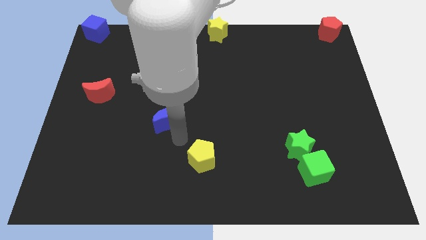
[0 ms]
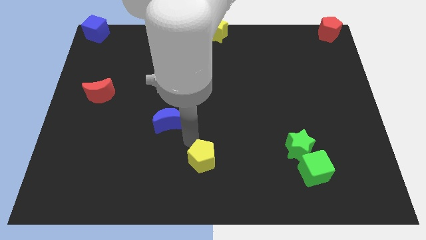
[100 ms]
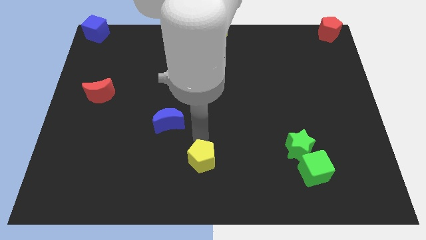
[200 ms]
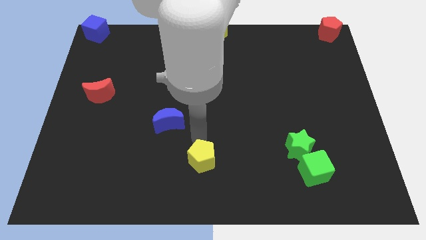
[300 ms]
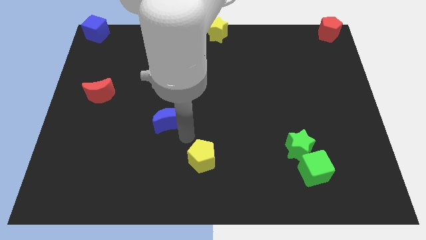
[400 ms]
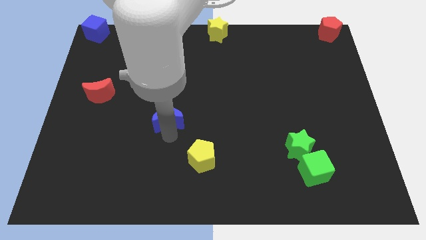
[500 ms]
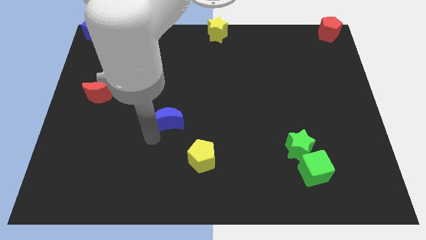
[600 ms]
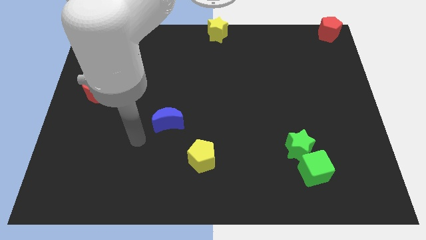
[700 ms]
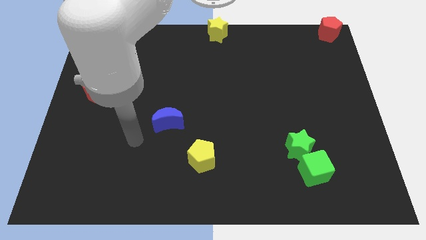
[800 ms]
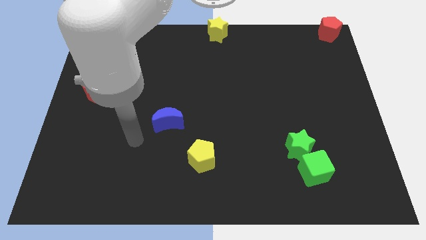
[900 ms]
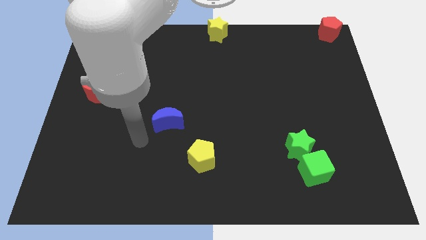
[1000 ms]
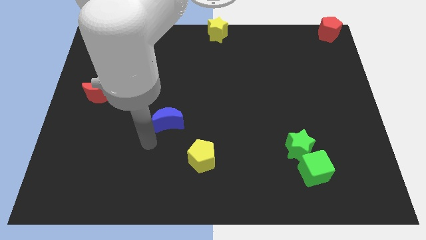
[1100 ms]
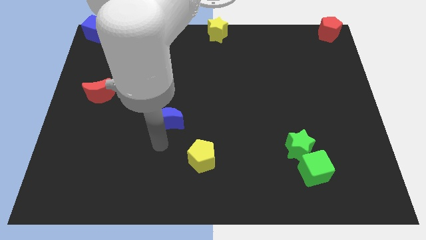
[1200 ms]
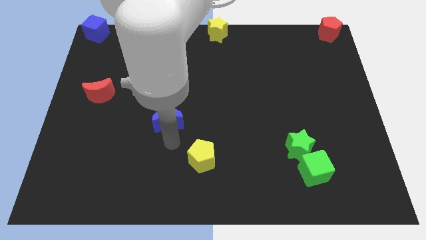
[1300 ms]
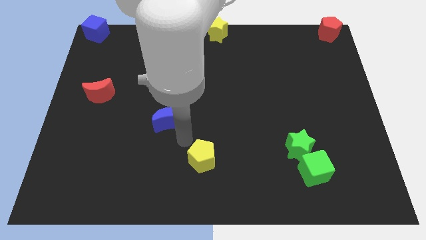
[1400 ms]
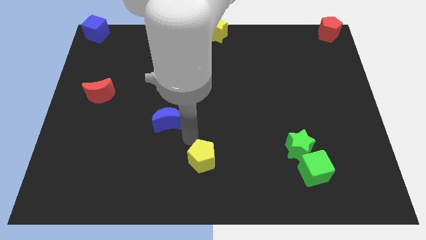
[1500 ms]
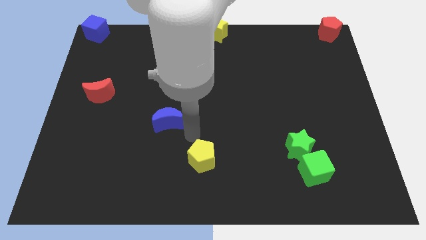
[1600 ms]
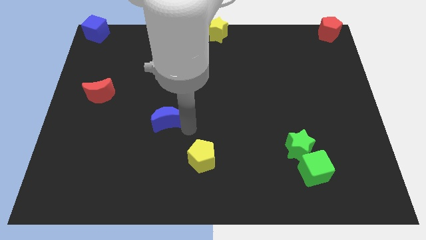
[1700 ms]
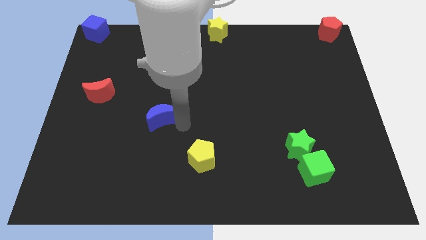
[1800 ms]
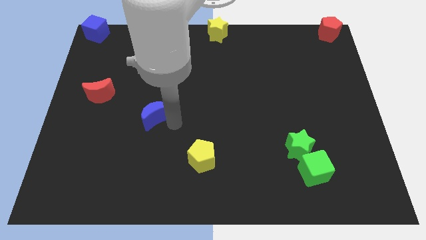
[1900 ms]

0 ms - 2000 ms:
place the blue crescent diagonally to the top left of the yellow pentagon

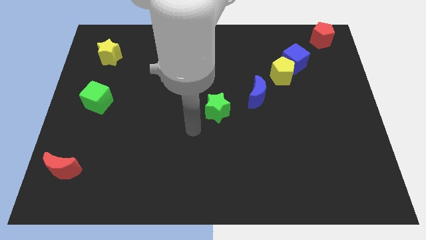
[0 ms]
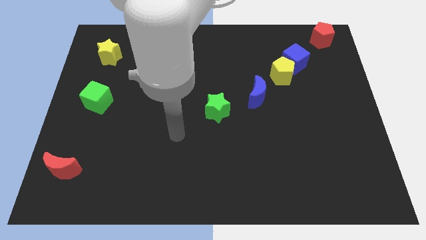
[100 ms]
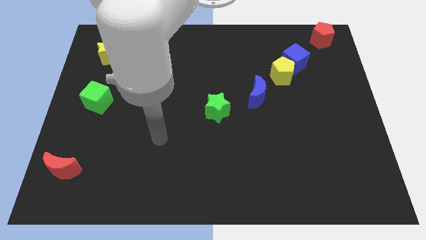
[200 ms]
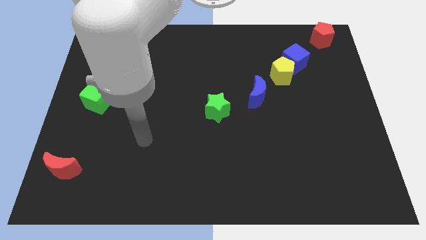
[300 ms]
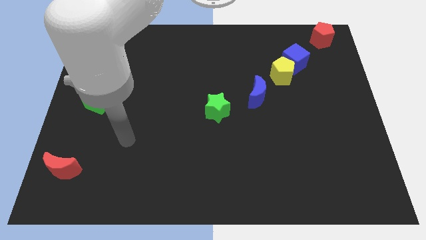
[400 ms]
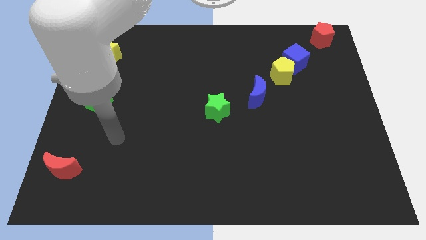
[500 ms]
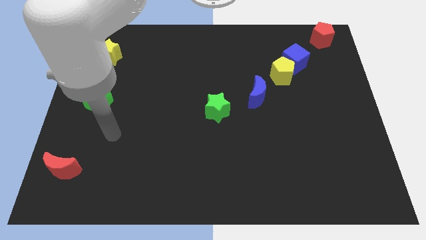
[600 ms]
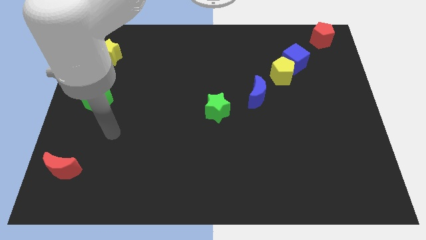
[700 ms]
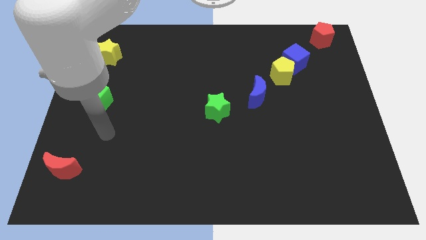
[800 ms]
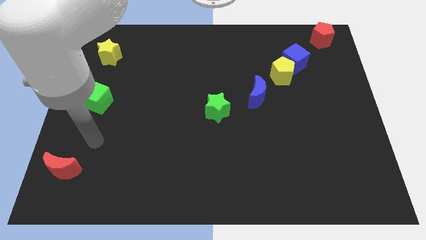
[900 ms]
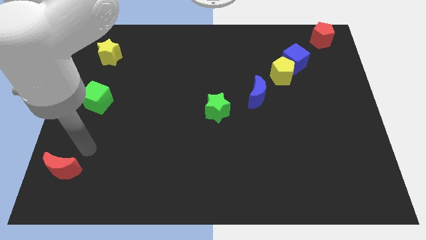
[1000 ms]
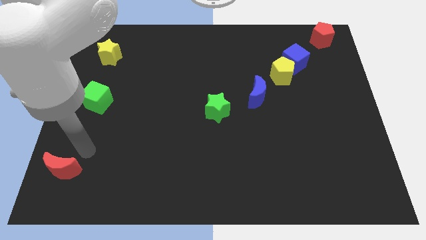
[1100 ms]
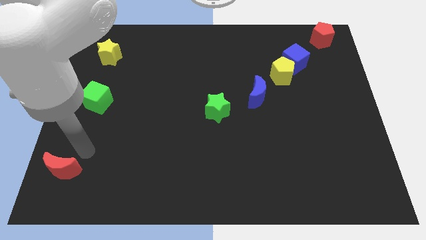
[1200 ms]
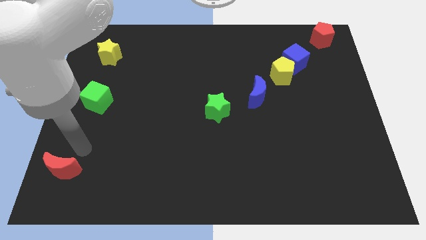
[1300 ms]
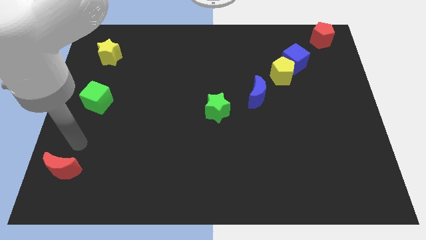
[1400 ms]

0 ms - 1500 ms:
point your hand above the red crescent

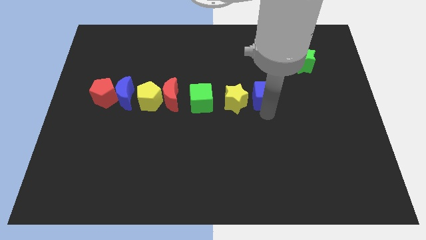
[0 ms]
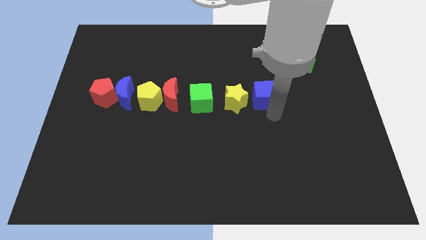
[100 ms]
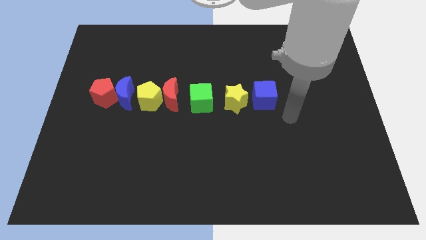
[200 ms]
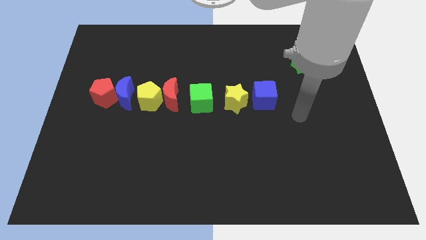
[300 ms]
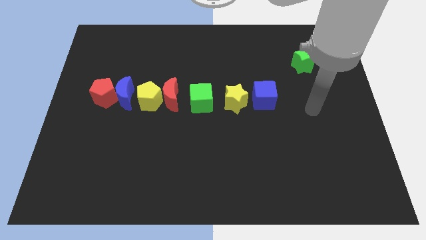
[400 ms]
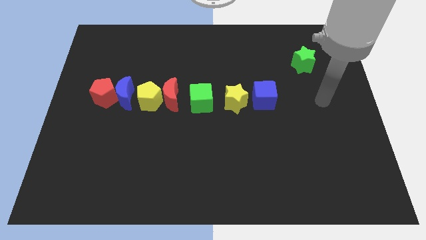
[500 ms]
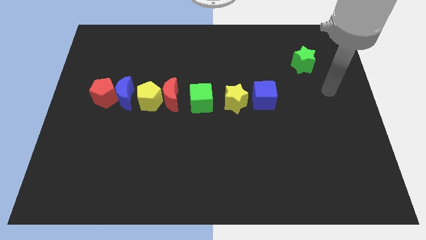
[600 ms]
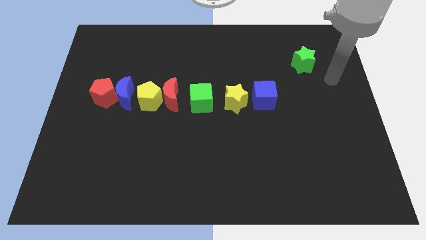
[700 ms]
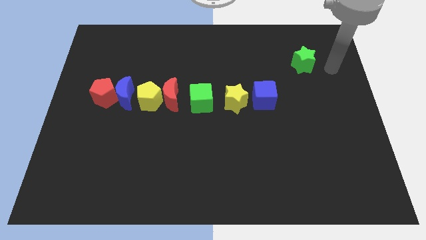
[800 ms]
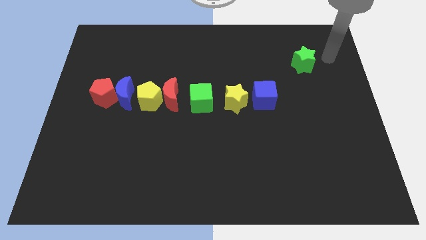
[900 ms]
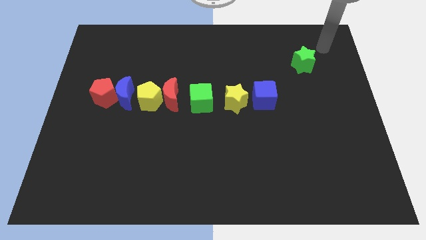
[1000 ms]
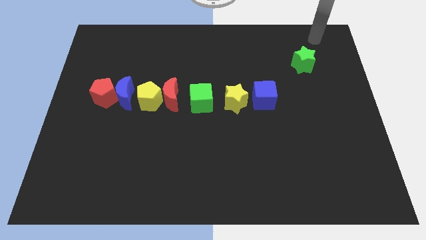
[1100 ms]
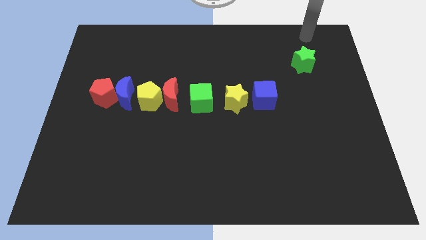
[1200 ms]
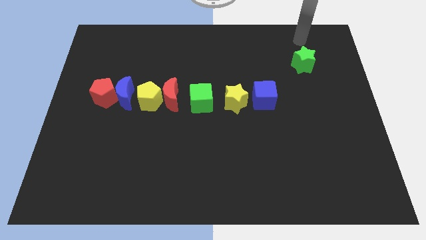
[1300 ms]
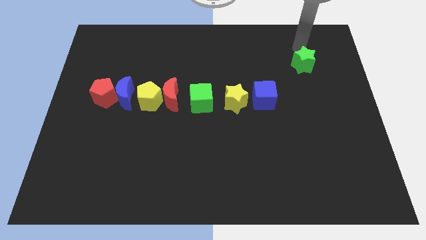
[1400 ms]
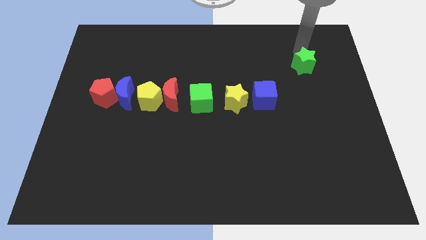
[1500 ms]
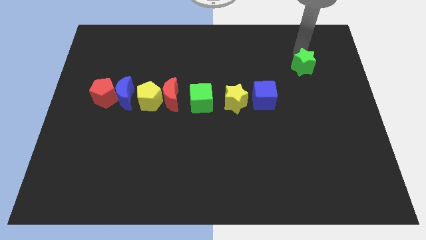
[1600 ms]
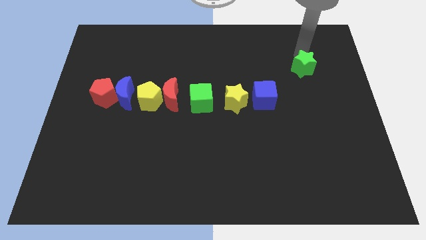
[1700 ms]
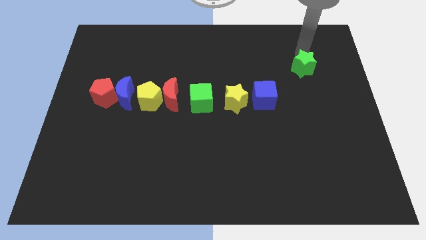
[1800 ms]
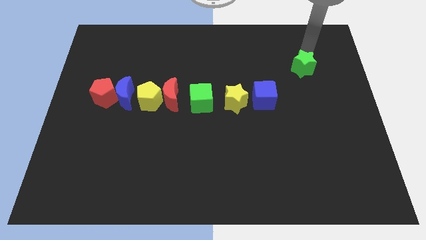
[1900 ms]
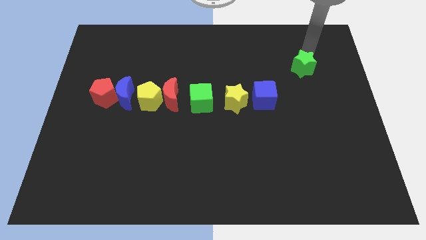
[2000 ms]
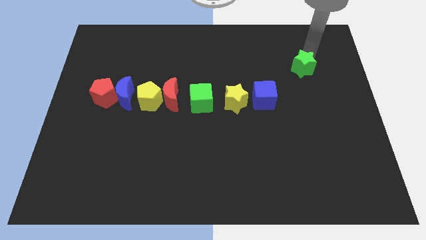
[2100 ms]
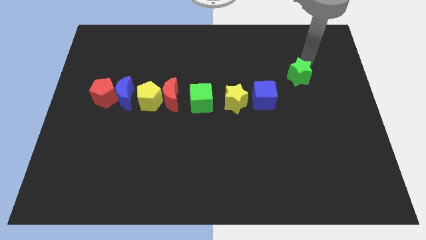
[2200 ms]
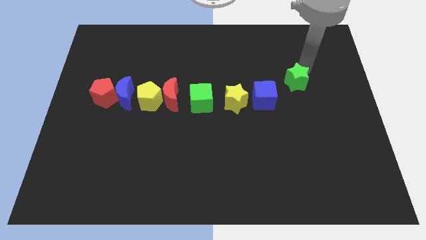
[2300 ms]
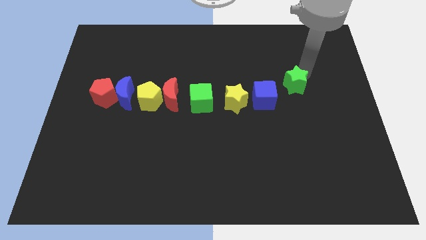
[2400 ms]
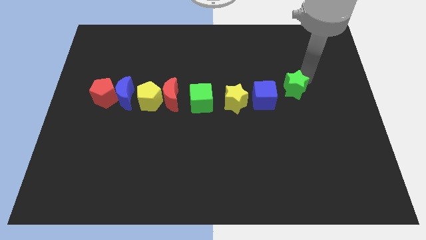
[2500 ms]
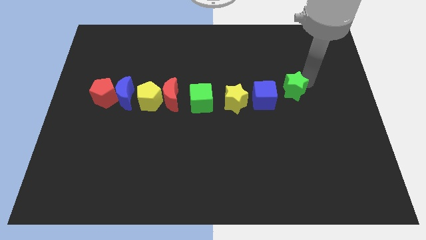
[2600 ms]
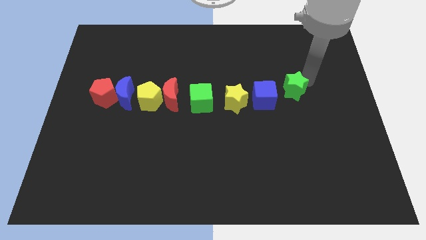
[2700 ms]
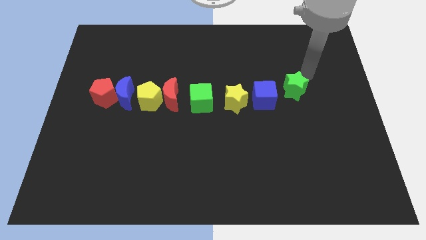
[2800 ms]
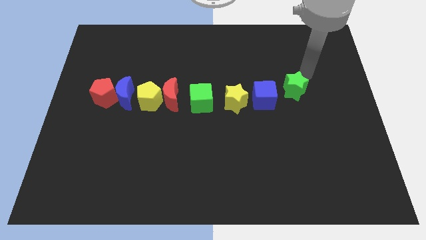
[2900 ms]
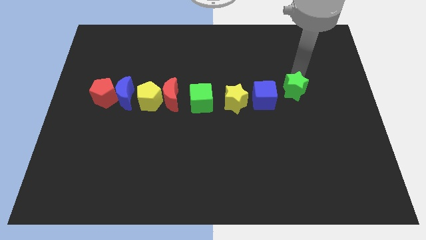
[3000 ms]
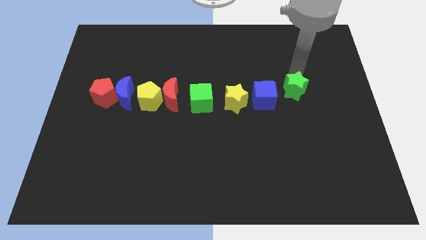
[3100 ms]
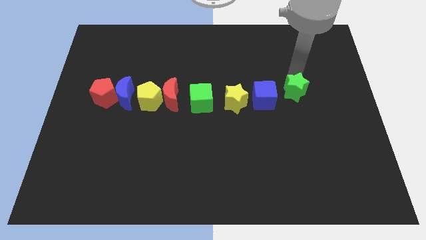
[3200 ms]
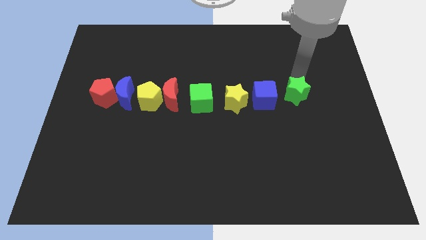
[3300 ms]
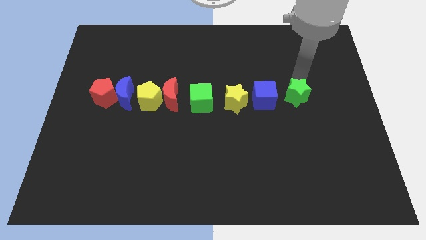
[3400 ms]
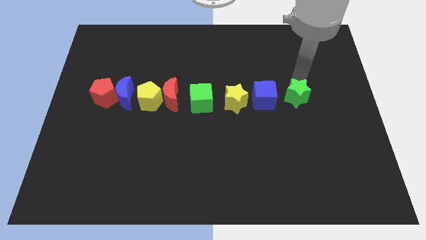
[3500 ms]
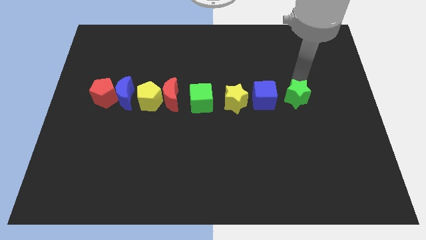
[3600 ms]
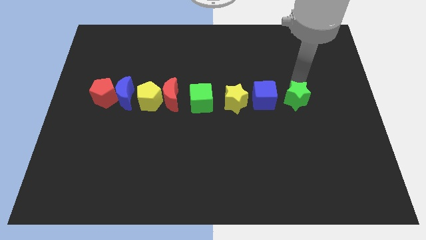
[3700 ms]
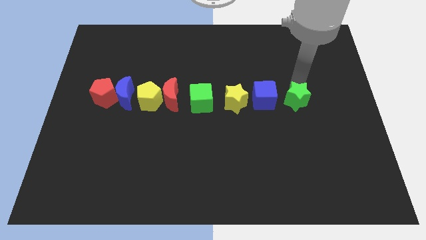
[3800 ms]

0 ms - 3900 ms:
push the green star towards the bottom side of the board

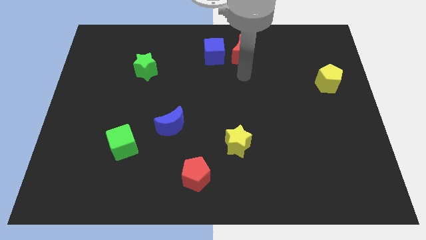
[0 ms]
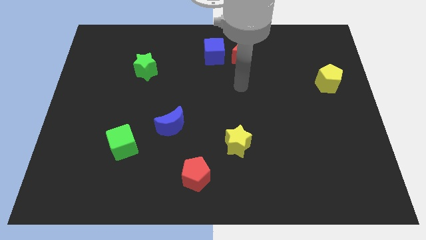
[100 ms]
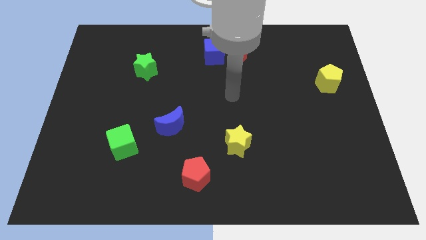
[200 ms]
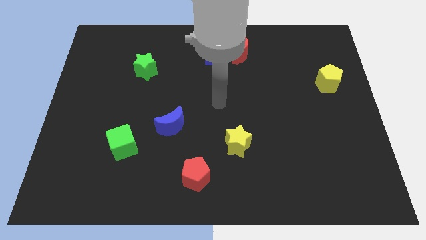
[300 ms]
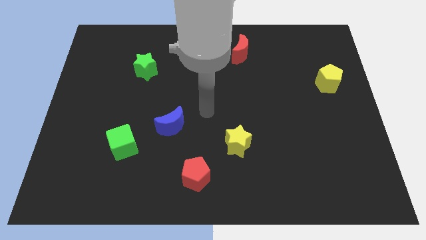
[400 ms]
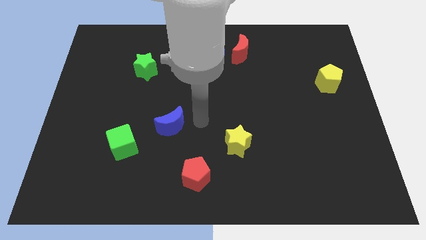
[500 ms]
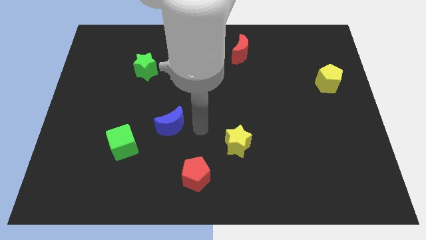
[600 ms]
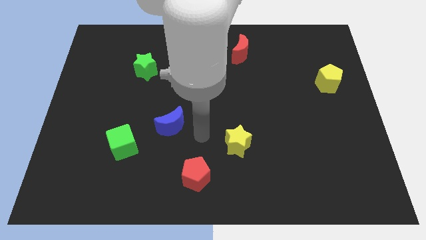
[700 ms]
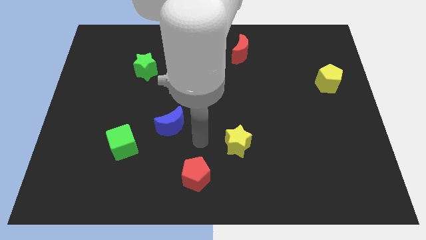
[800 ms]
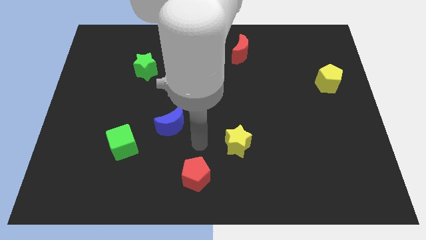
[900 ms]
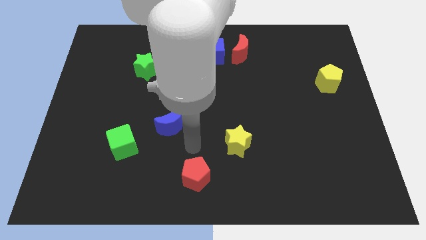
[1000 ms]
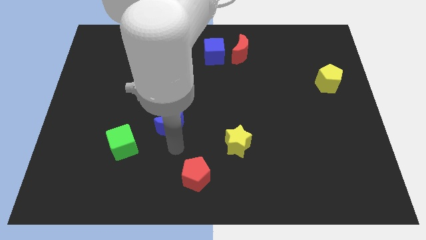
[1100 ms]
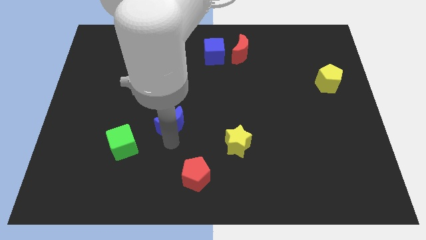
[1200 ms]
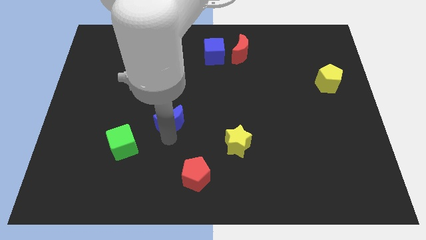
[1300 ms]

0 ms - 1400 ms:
point your hand at the bottom side of the blue moon
